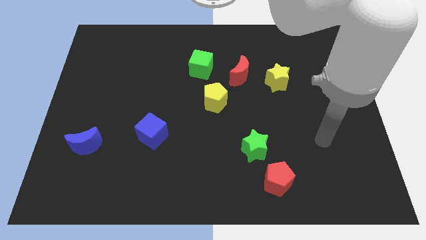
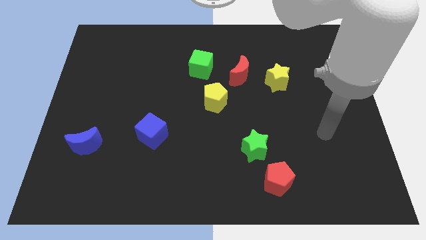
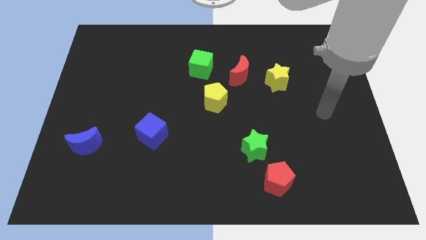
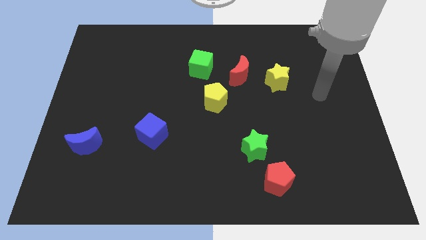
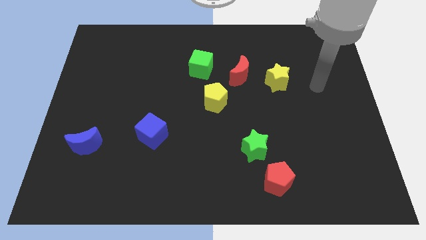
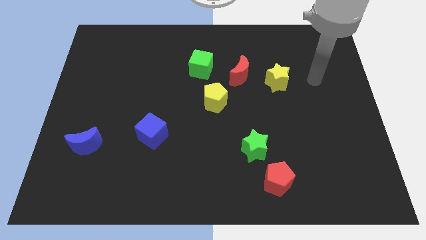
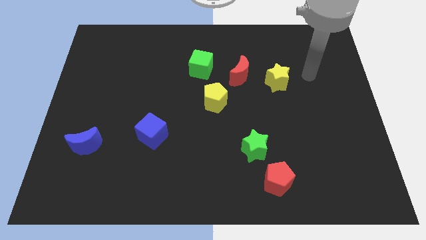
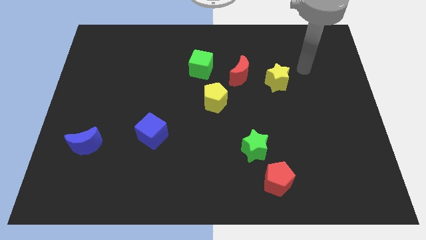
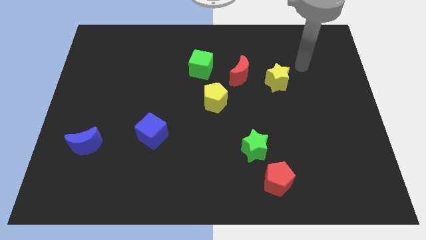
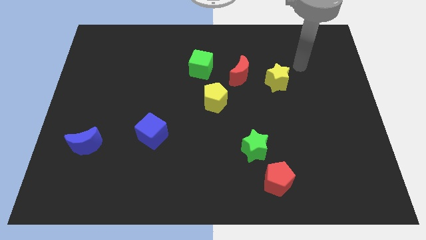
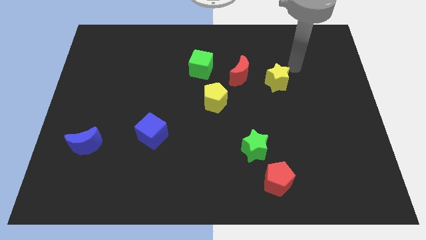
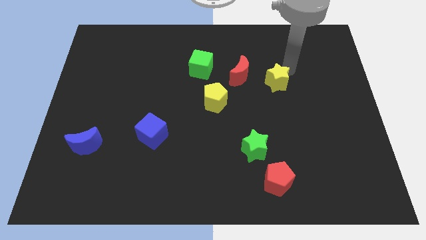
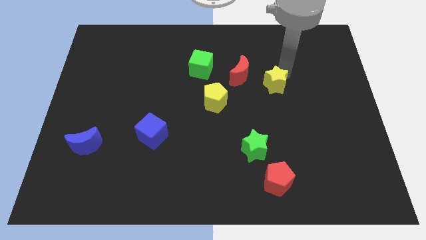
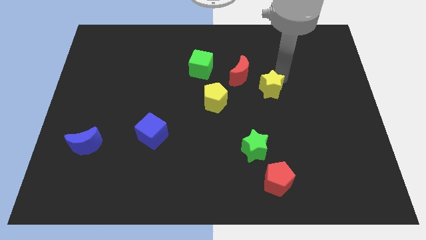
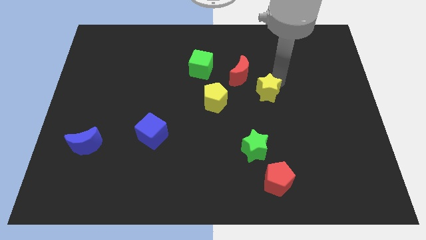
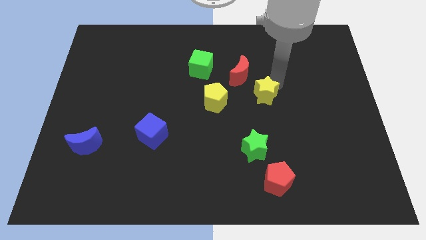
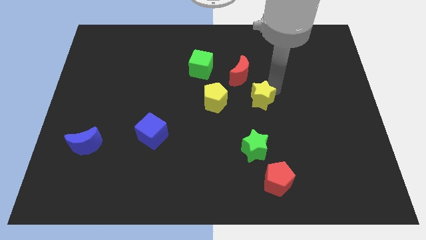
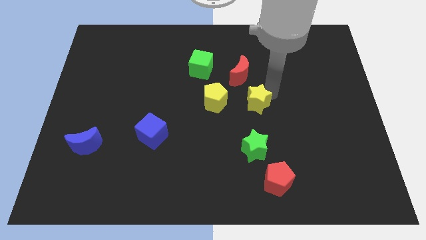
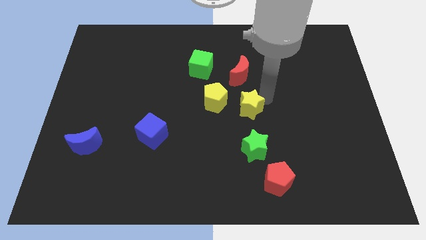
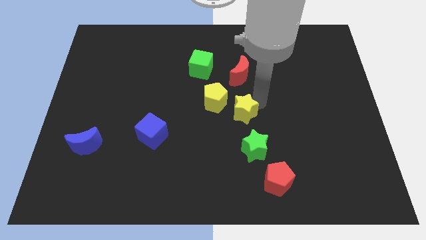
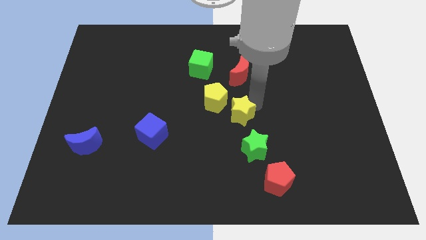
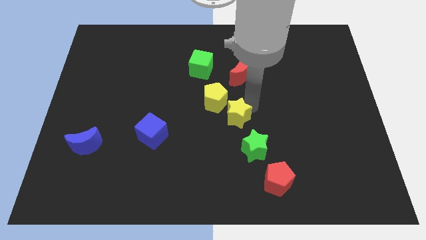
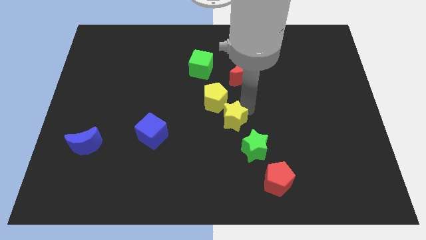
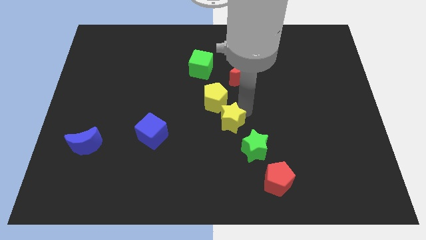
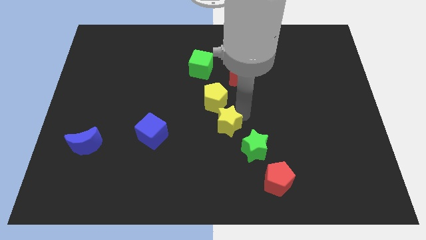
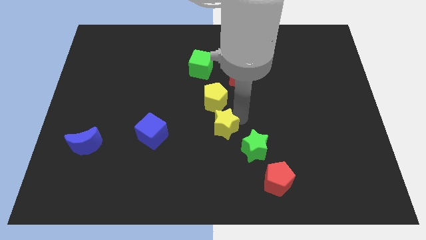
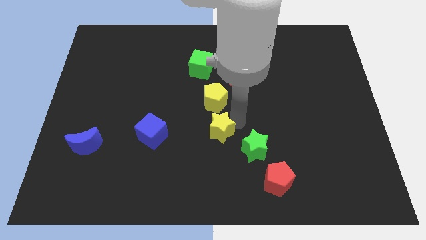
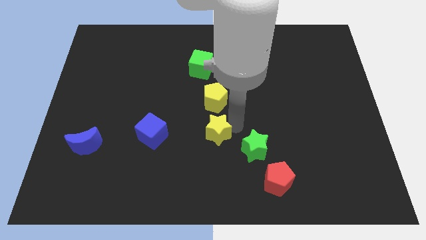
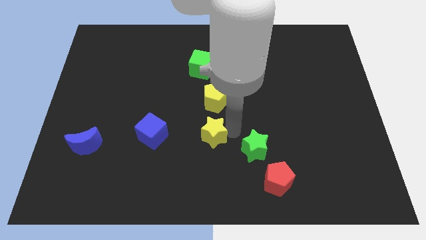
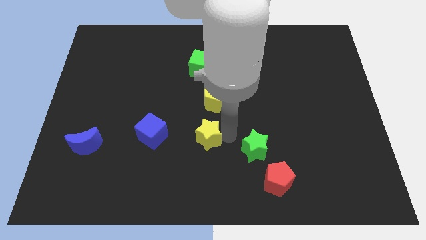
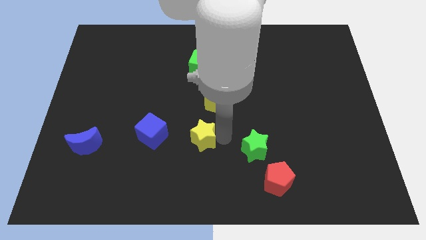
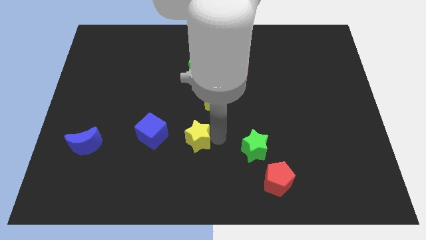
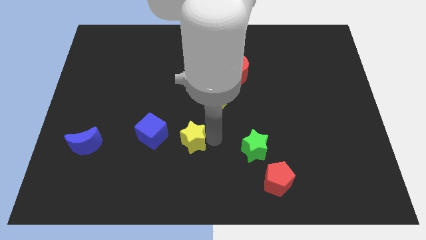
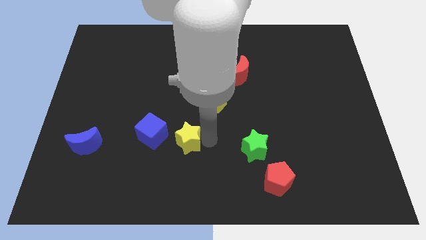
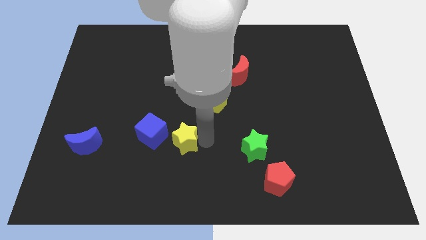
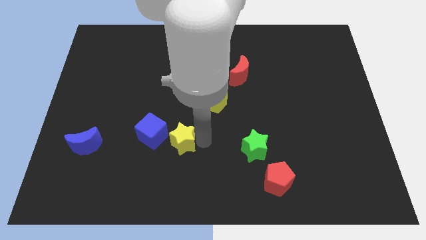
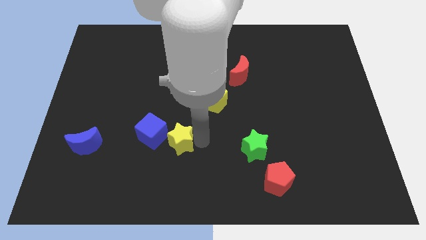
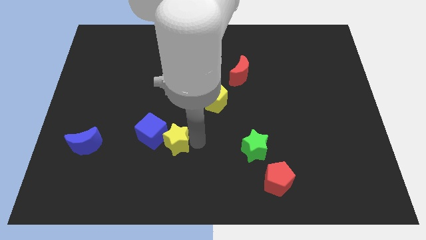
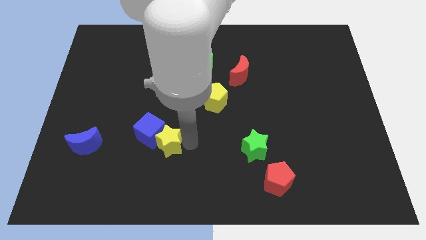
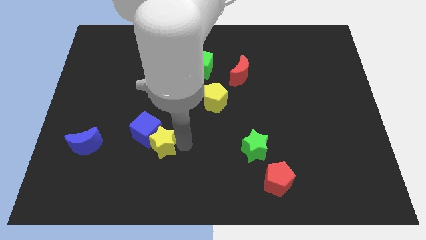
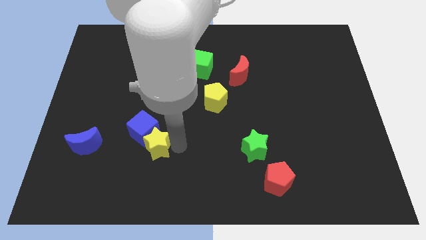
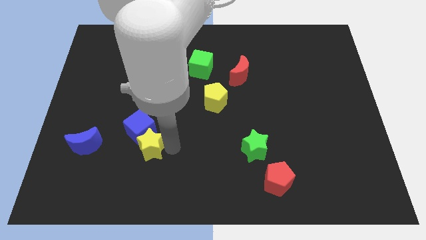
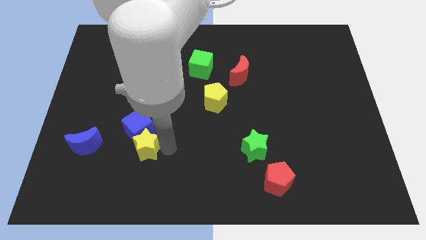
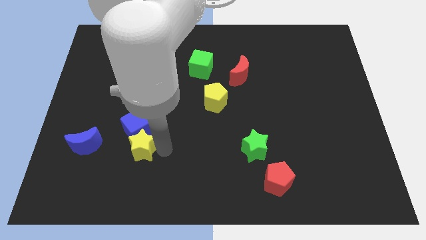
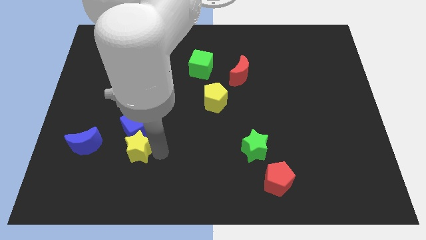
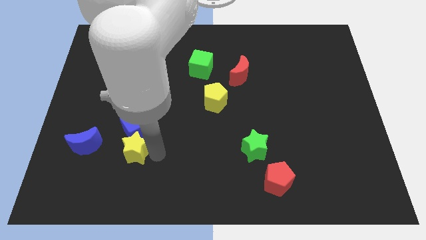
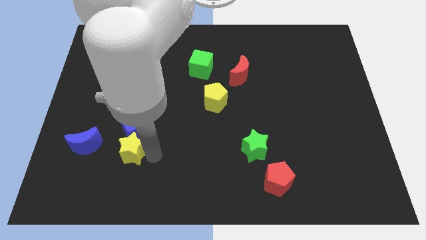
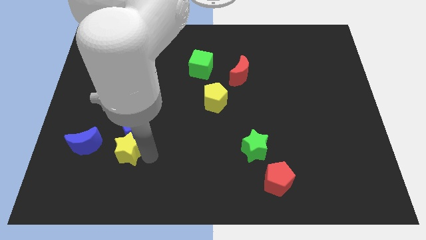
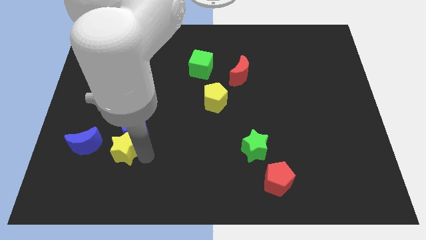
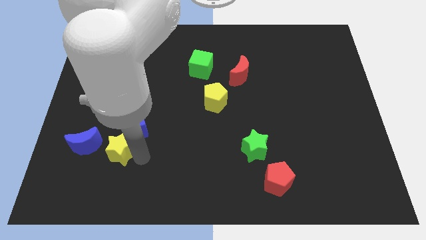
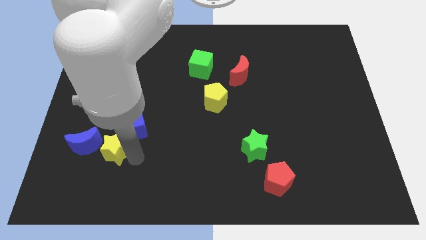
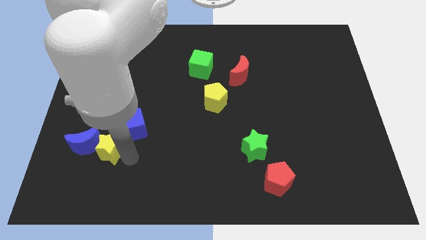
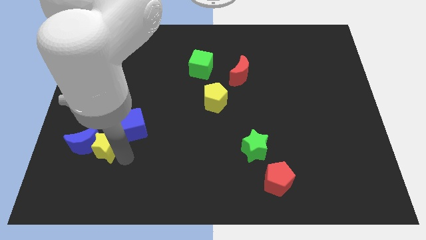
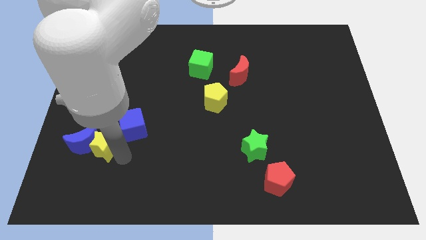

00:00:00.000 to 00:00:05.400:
put the yellow star close to the blue moon

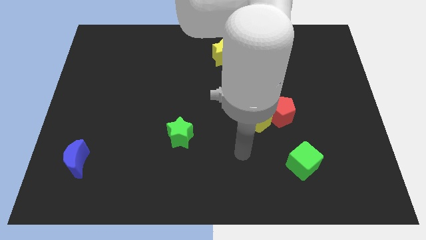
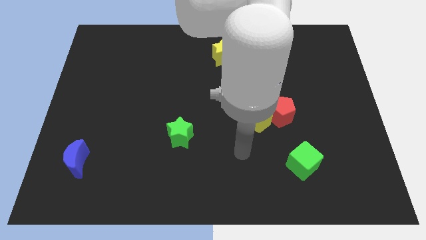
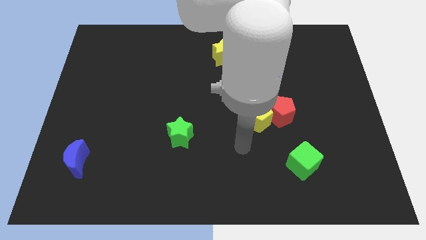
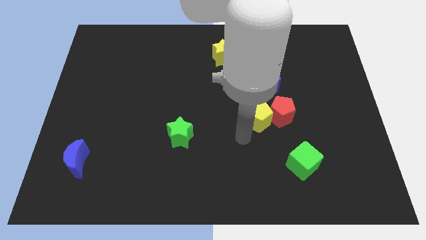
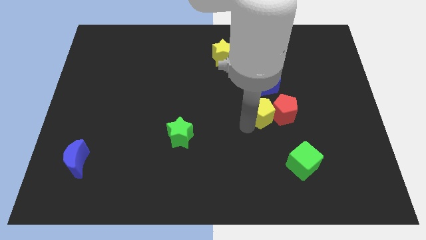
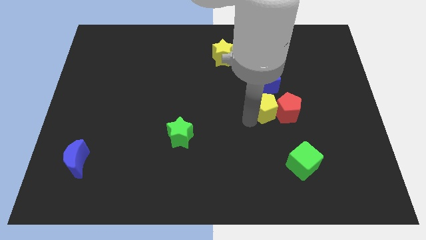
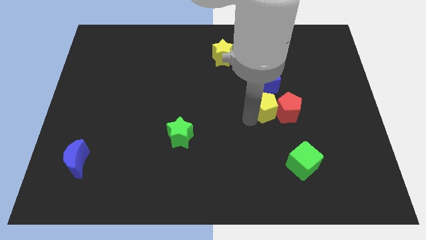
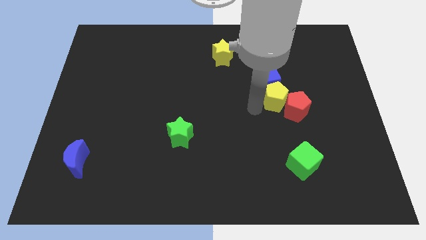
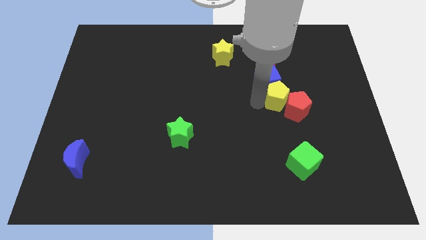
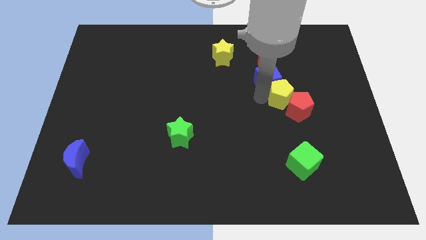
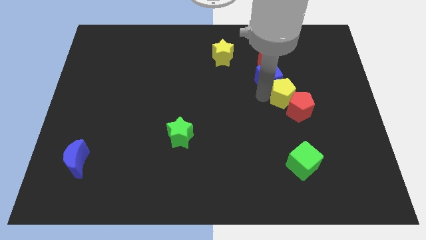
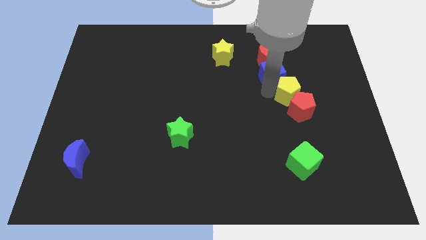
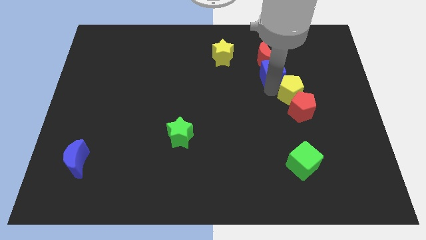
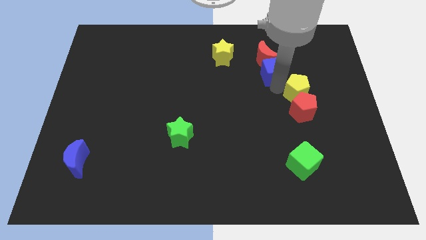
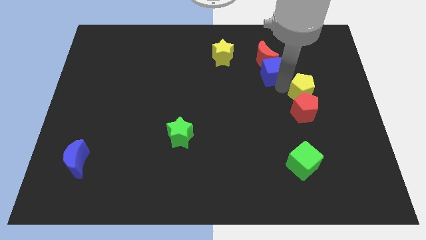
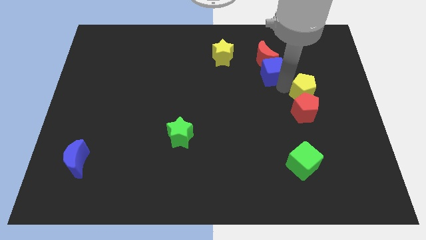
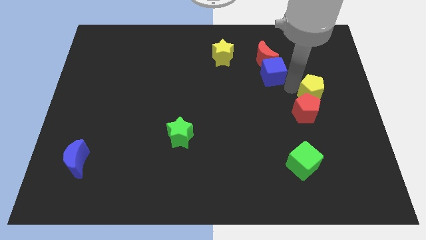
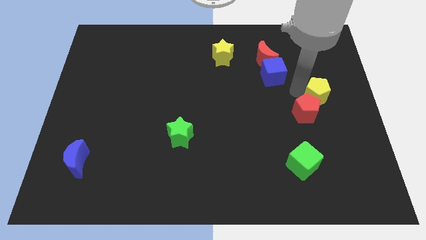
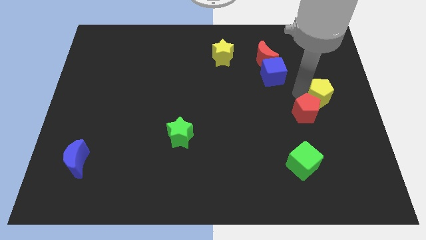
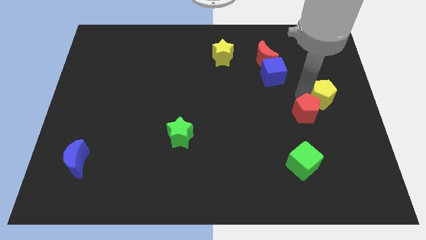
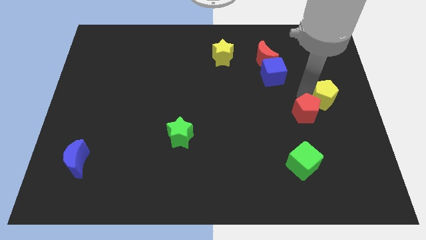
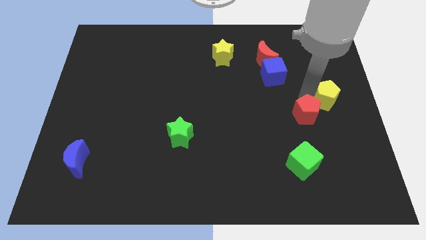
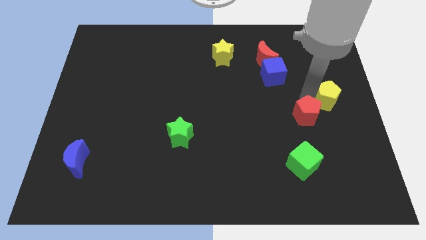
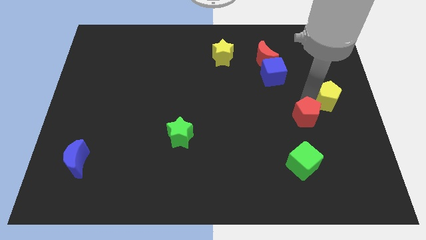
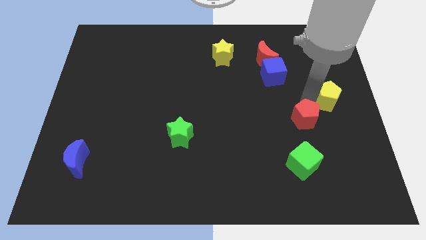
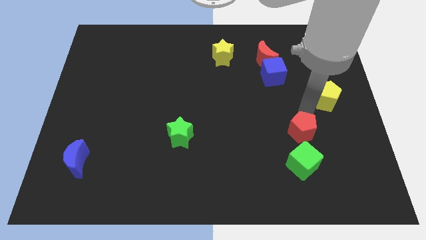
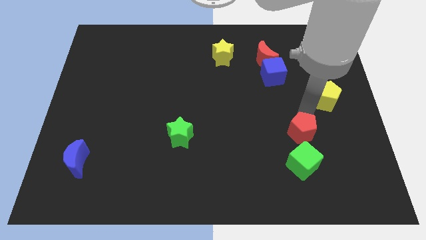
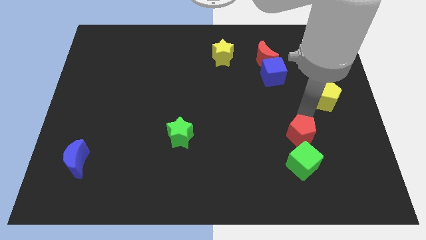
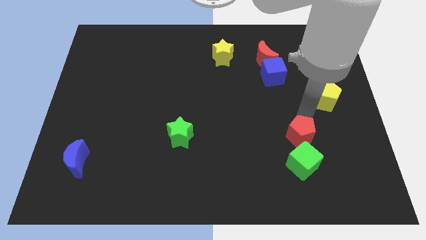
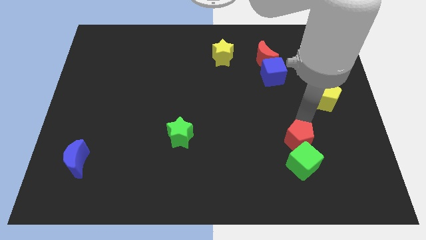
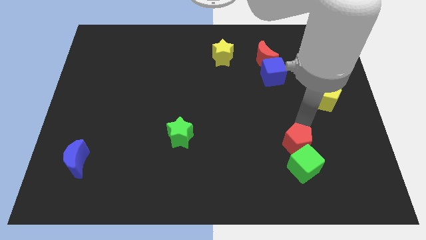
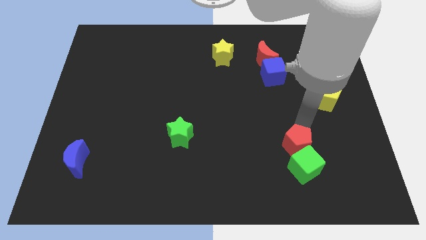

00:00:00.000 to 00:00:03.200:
move the red pentagon to the green cube
